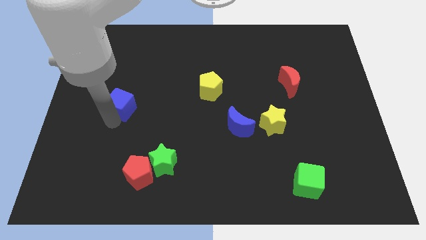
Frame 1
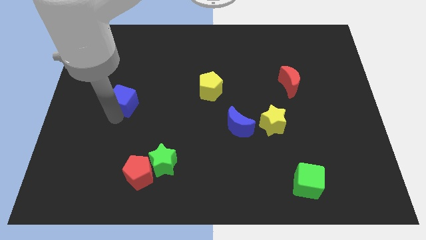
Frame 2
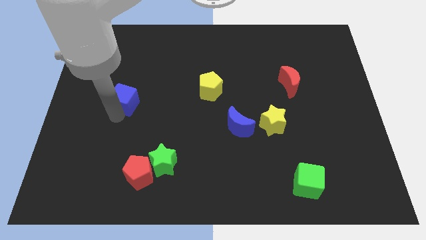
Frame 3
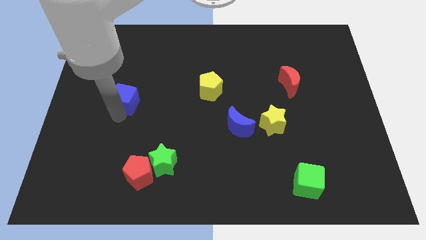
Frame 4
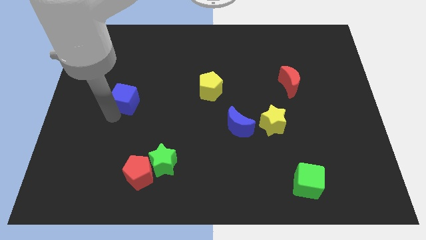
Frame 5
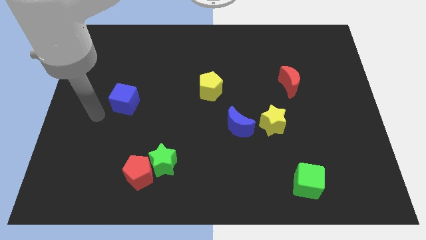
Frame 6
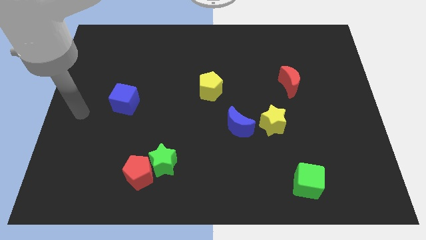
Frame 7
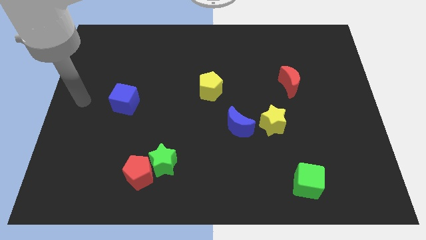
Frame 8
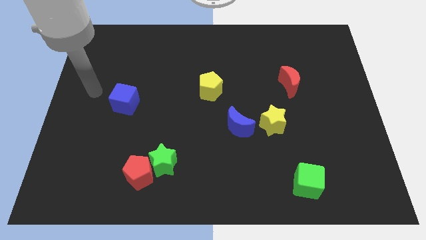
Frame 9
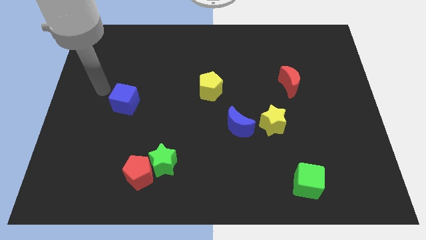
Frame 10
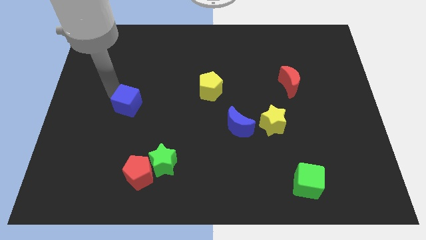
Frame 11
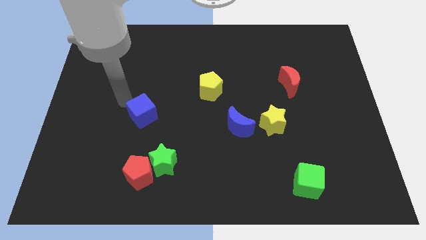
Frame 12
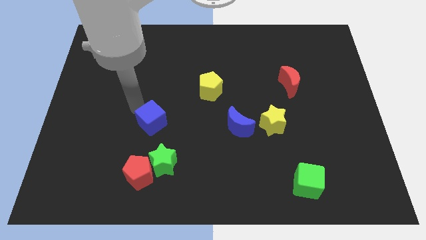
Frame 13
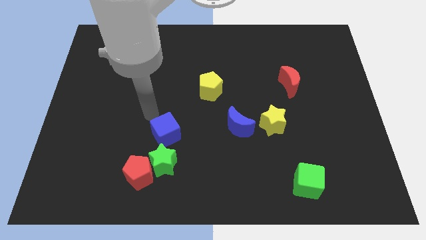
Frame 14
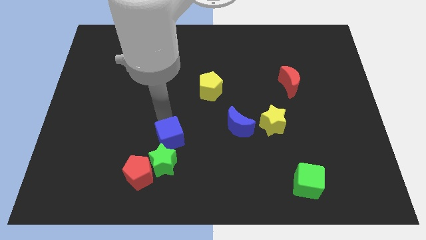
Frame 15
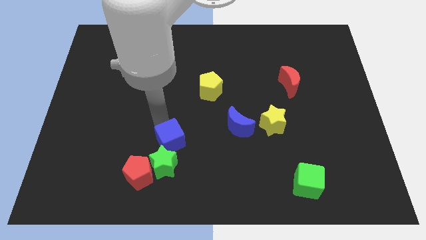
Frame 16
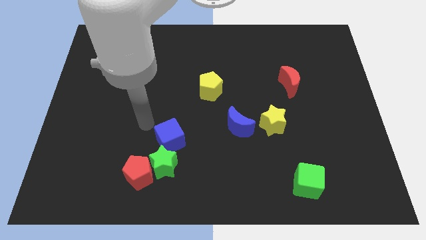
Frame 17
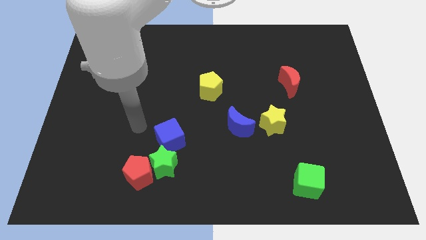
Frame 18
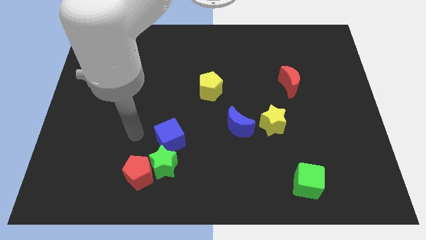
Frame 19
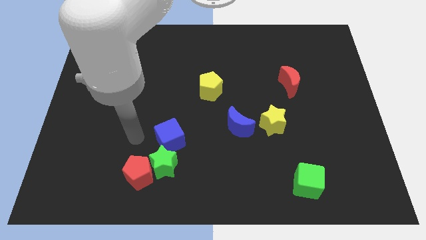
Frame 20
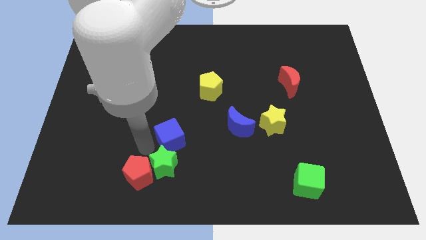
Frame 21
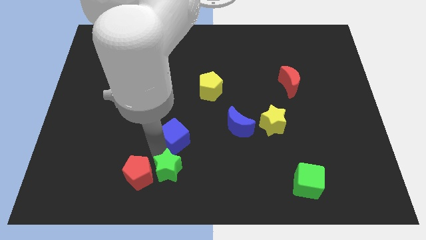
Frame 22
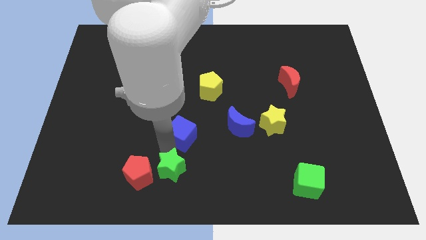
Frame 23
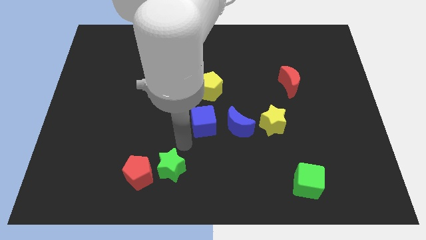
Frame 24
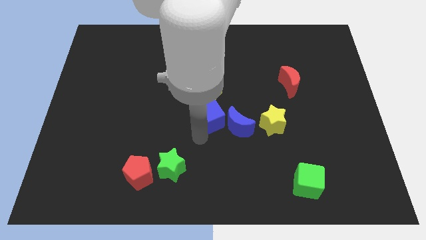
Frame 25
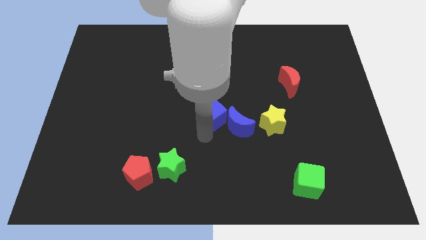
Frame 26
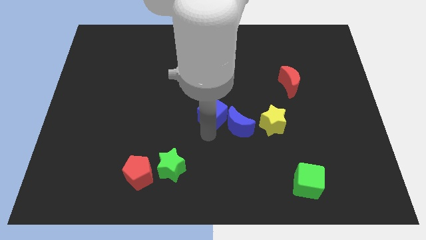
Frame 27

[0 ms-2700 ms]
push blue cube below yellow pentagon

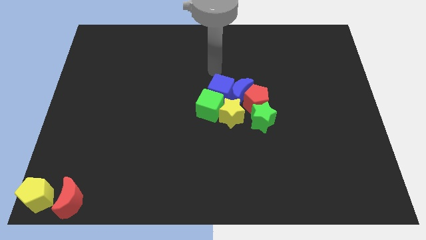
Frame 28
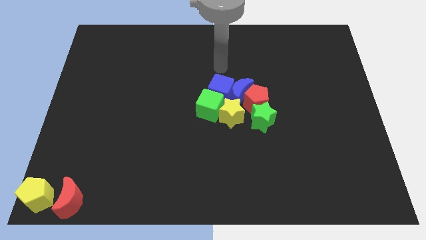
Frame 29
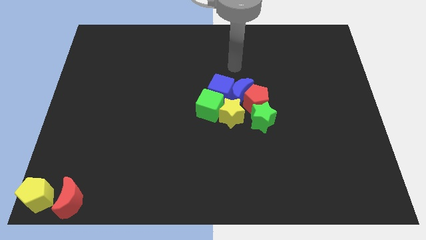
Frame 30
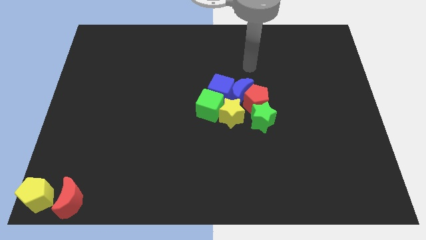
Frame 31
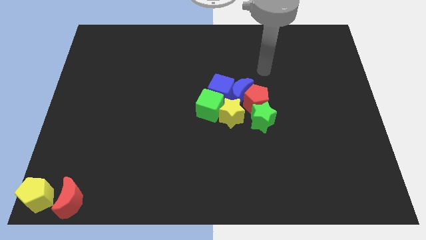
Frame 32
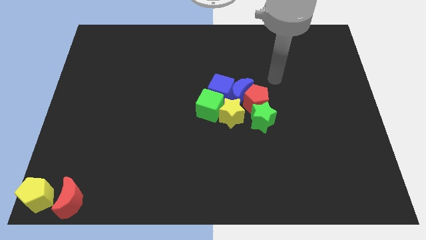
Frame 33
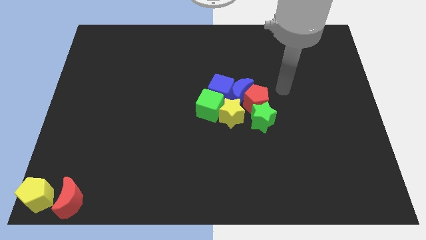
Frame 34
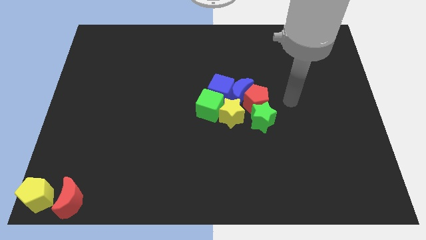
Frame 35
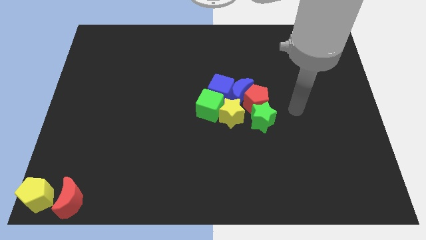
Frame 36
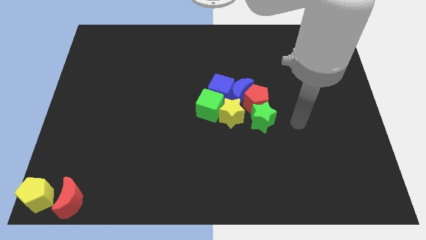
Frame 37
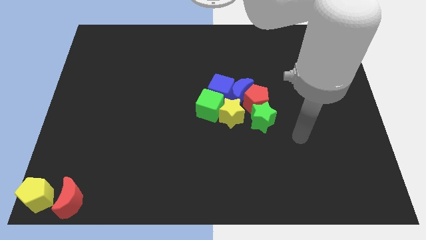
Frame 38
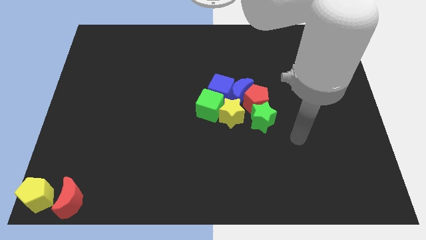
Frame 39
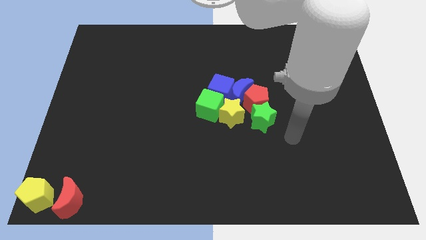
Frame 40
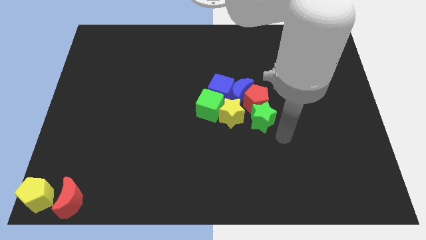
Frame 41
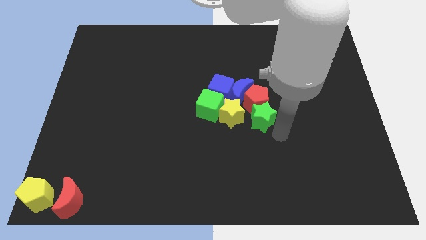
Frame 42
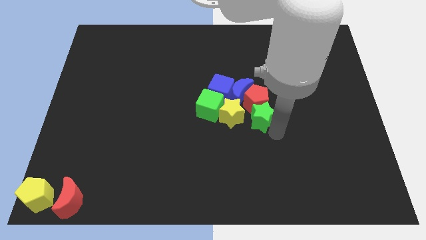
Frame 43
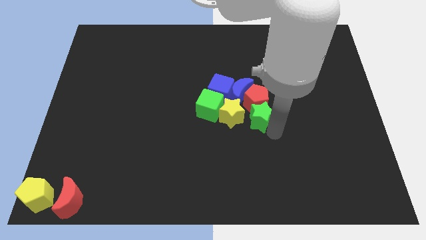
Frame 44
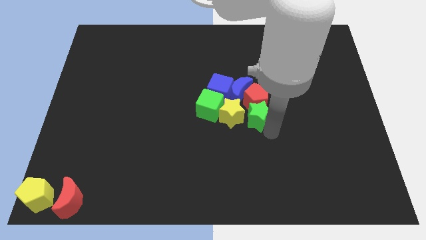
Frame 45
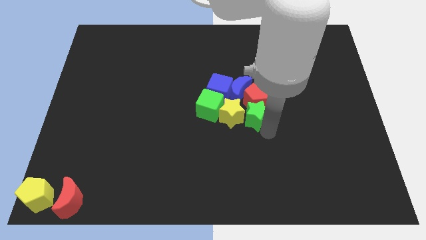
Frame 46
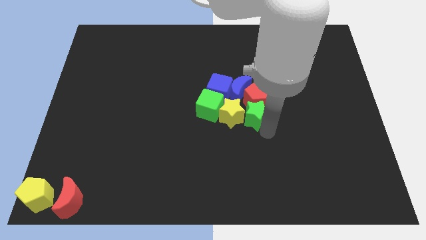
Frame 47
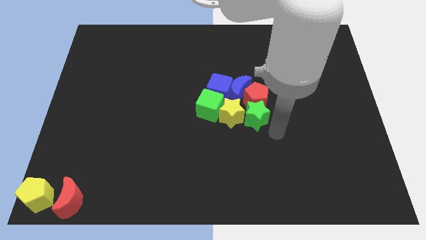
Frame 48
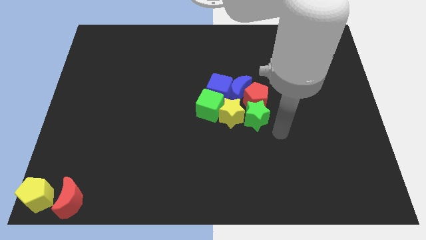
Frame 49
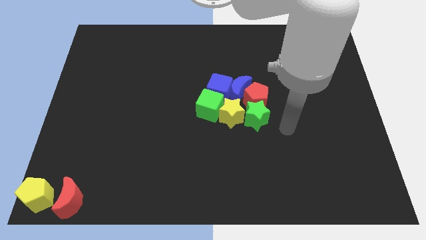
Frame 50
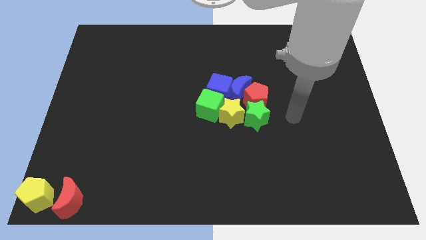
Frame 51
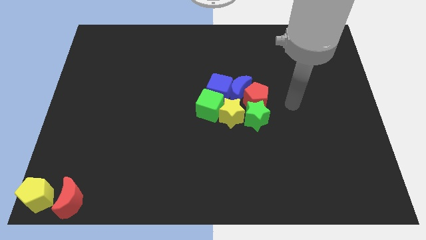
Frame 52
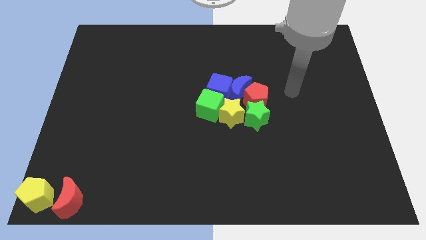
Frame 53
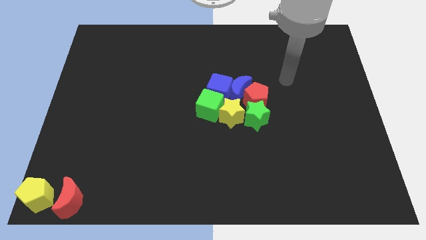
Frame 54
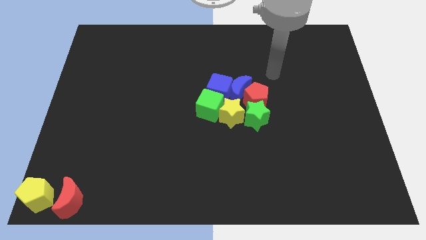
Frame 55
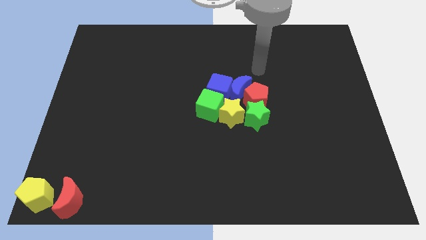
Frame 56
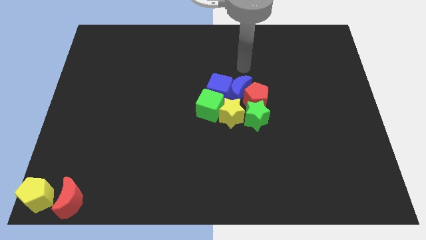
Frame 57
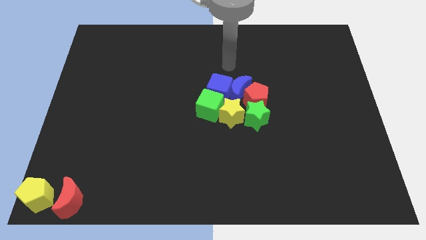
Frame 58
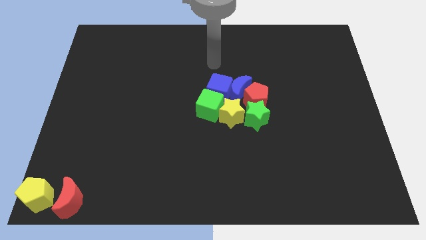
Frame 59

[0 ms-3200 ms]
move the green star slightly towards the yellow star

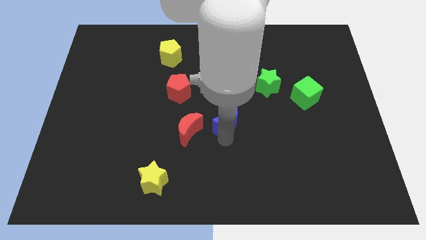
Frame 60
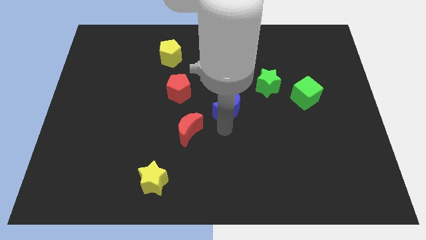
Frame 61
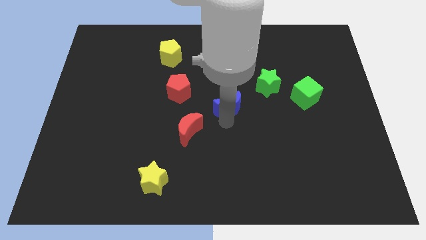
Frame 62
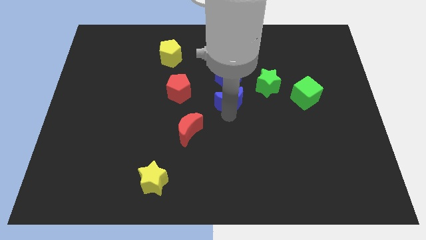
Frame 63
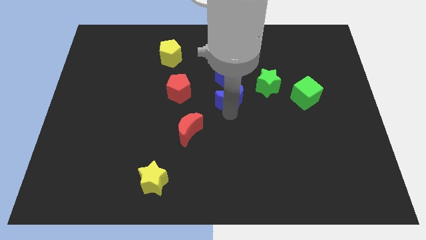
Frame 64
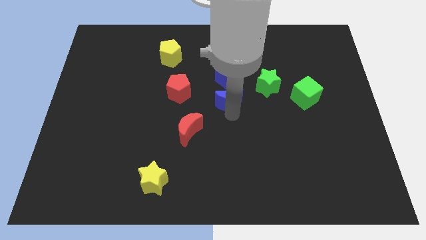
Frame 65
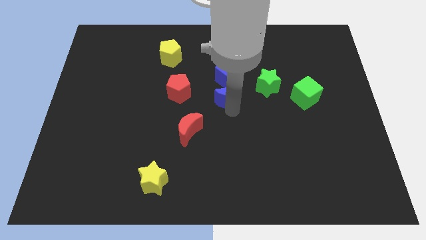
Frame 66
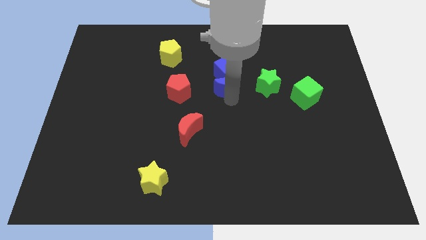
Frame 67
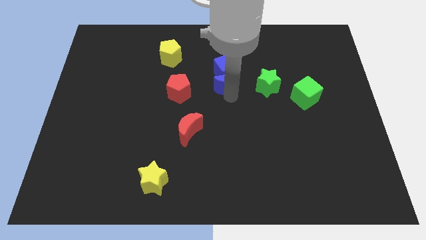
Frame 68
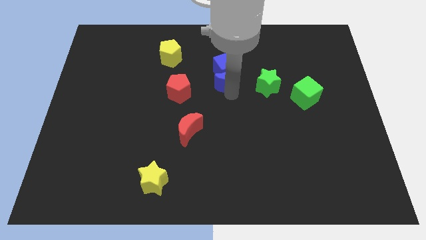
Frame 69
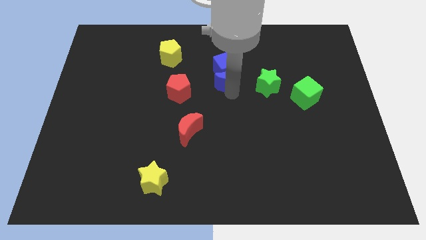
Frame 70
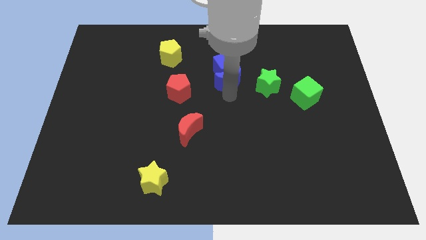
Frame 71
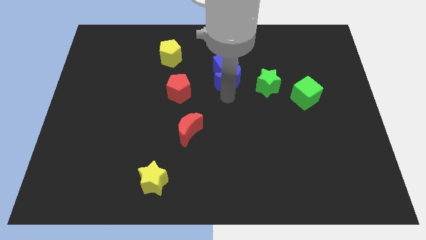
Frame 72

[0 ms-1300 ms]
push the blue crescent into the blue cube

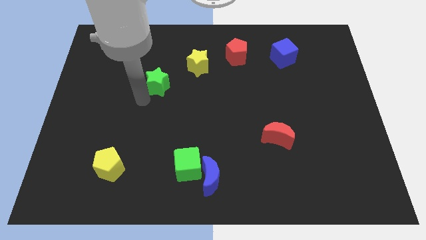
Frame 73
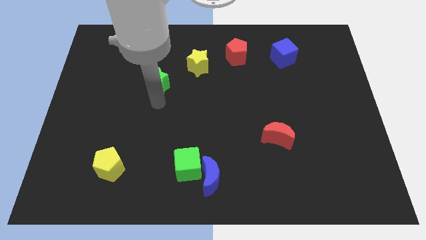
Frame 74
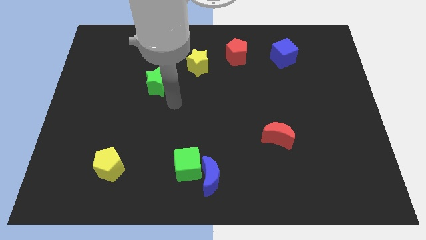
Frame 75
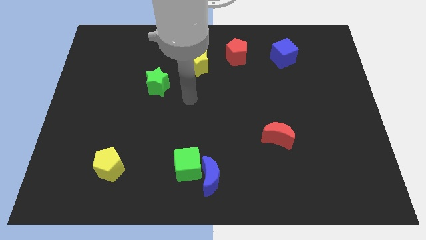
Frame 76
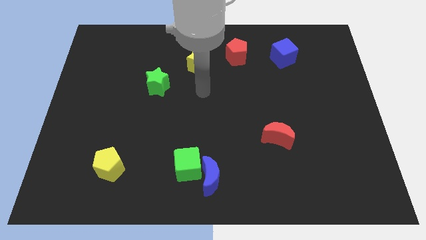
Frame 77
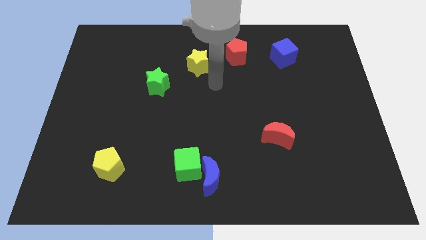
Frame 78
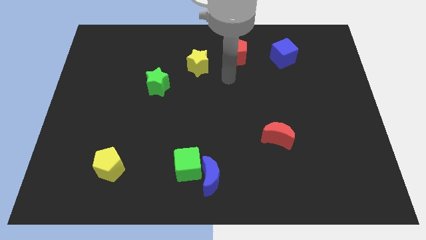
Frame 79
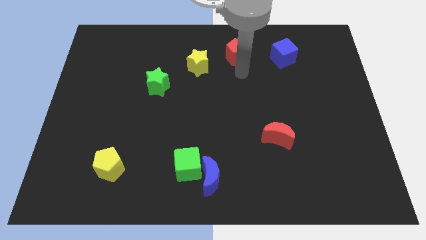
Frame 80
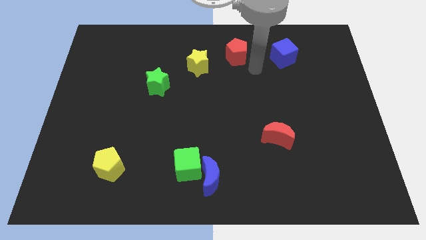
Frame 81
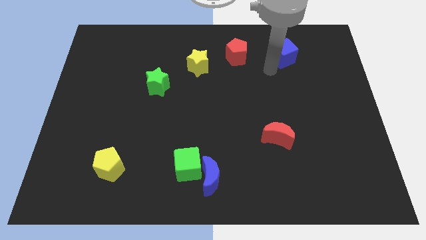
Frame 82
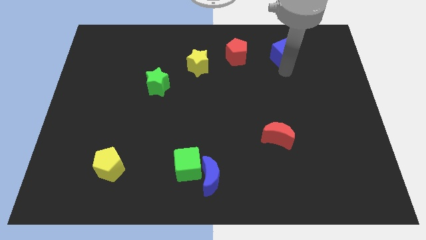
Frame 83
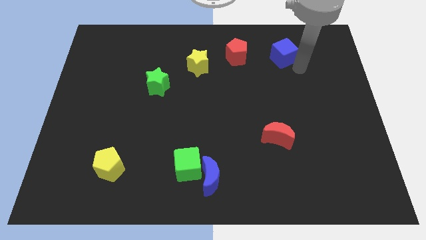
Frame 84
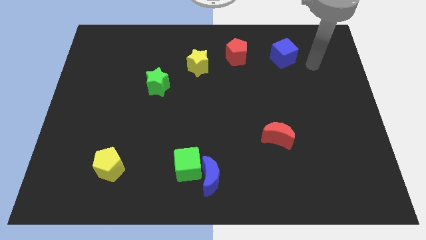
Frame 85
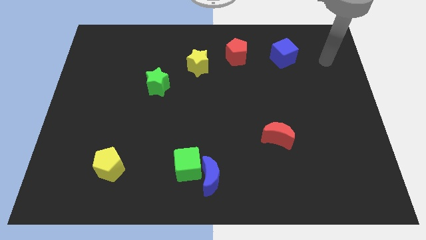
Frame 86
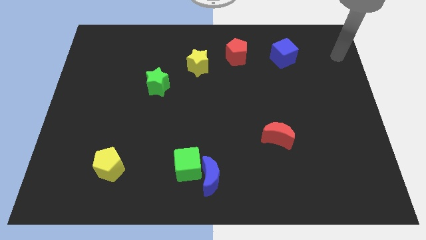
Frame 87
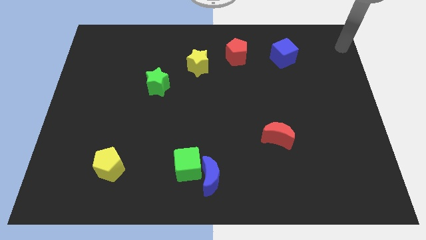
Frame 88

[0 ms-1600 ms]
move your arm towards the top right corner of the board
